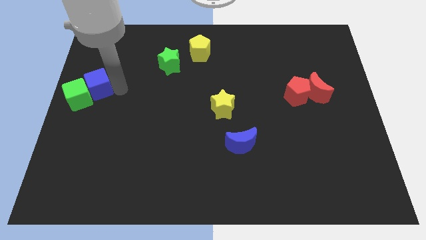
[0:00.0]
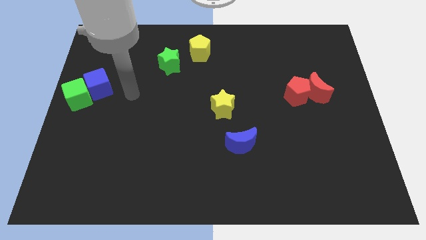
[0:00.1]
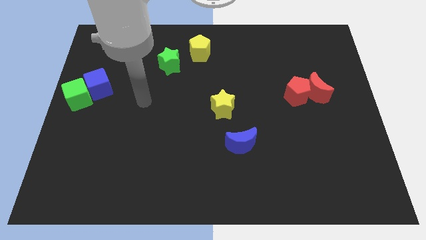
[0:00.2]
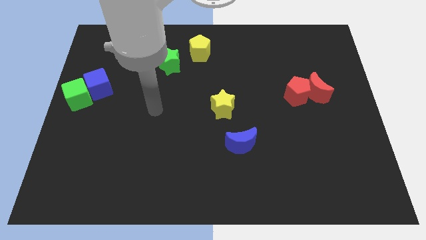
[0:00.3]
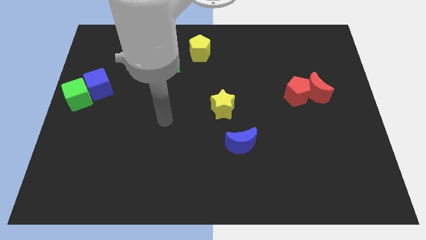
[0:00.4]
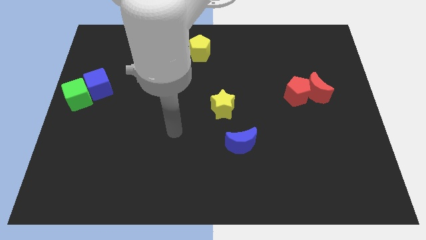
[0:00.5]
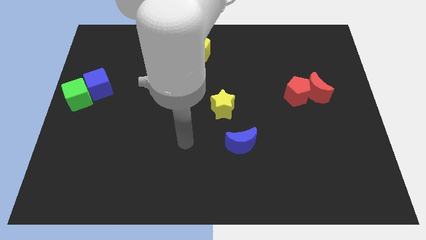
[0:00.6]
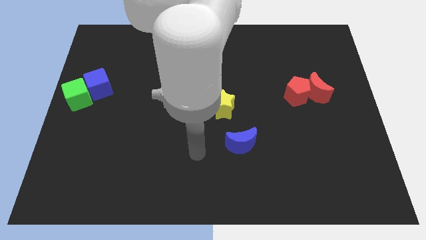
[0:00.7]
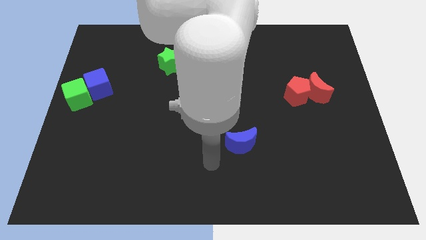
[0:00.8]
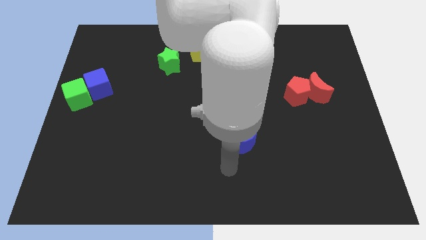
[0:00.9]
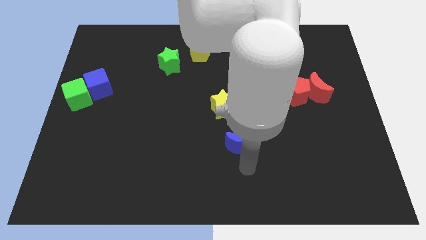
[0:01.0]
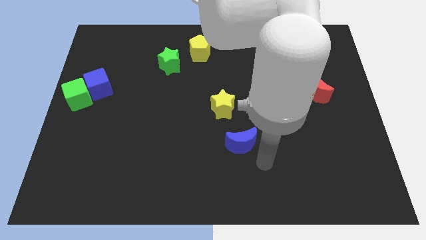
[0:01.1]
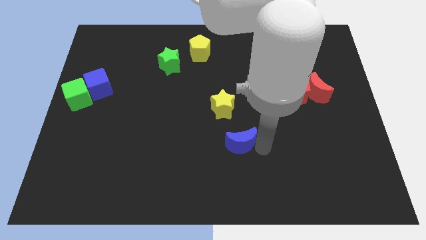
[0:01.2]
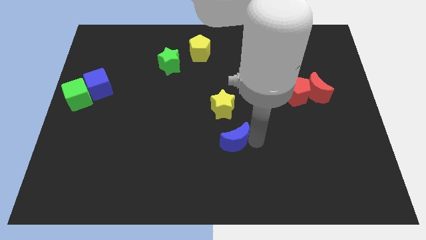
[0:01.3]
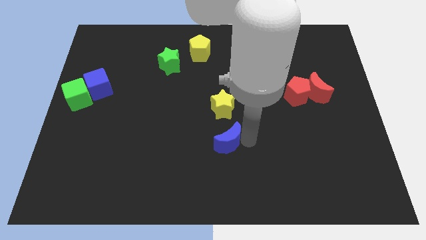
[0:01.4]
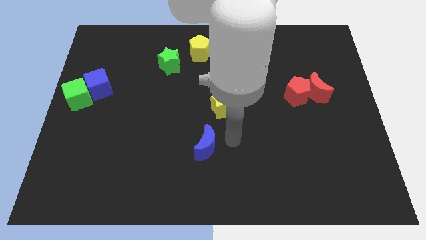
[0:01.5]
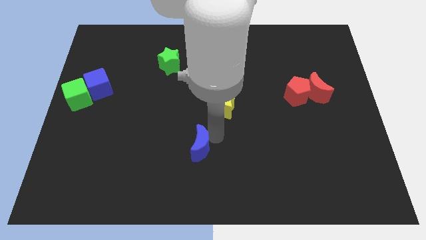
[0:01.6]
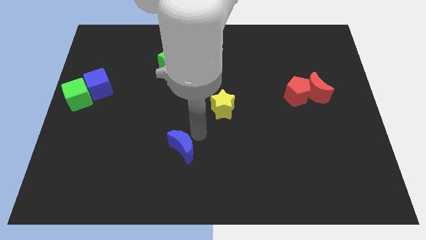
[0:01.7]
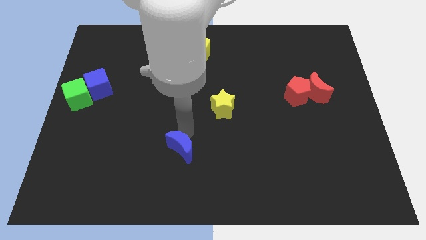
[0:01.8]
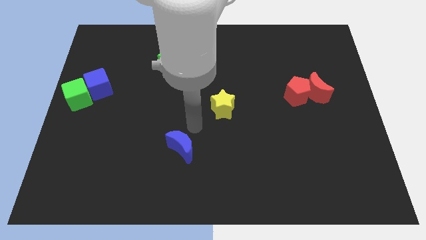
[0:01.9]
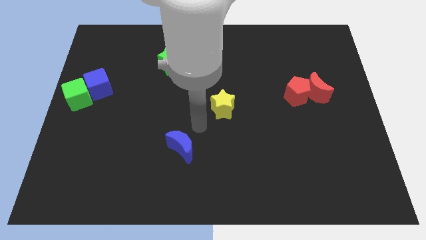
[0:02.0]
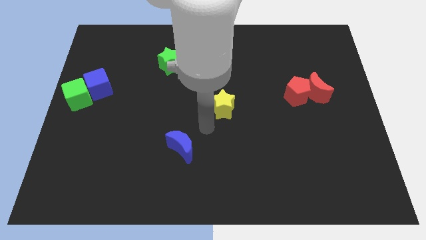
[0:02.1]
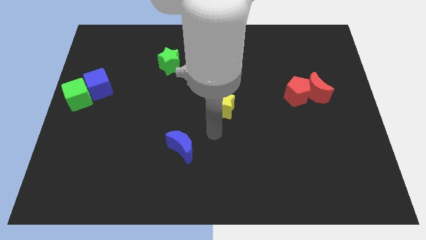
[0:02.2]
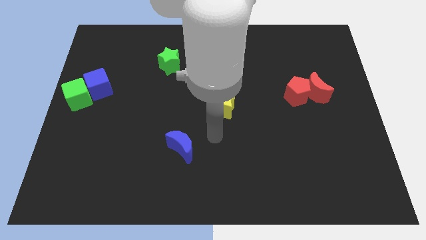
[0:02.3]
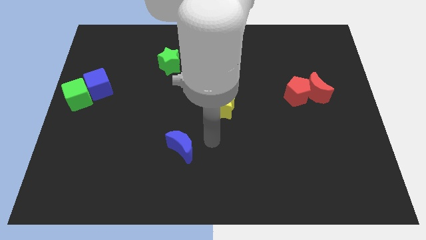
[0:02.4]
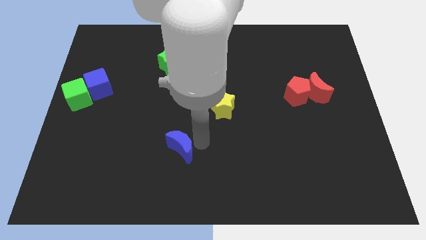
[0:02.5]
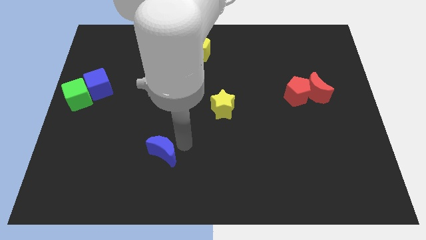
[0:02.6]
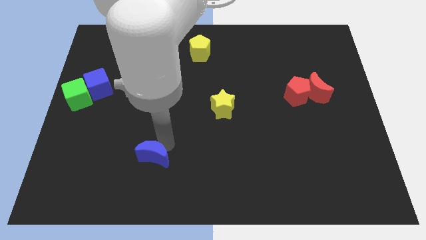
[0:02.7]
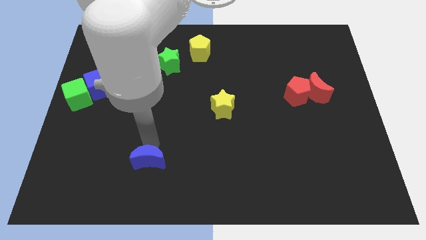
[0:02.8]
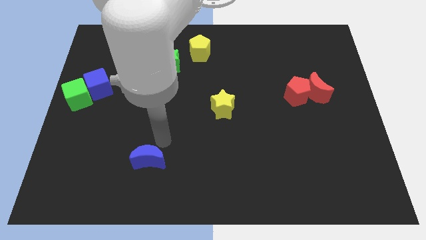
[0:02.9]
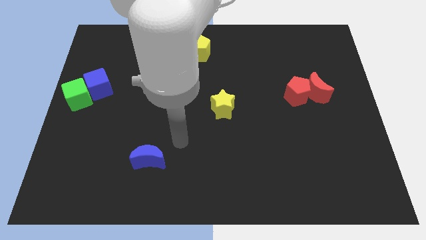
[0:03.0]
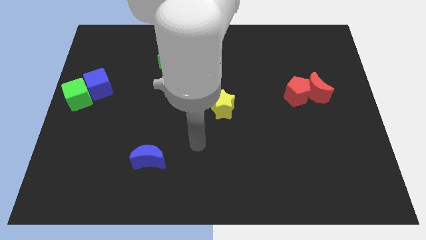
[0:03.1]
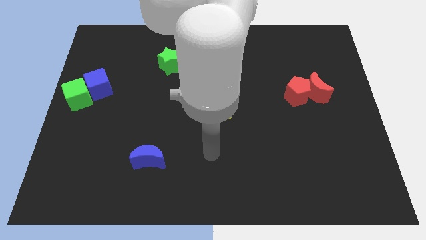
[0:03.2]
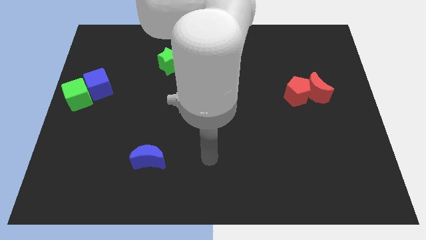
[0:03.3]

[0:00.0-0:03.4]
place your arm parallel to blue moon

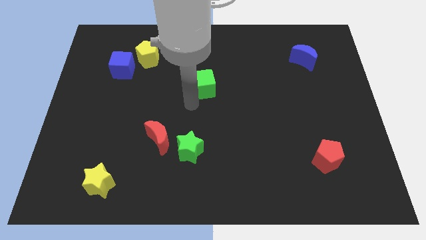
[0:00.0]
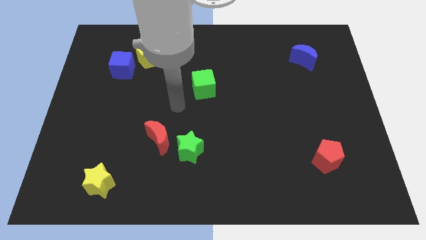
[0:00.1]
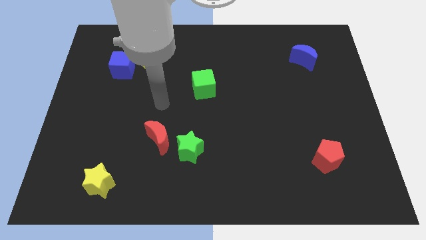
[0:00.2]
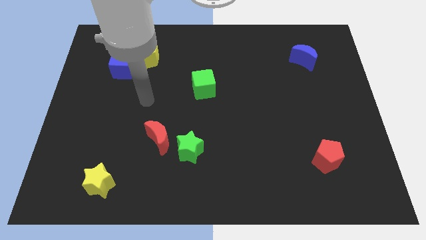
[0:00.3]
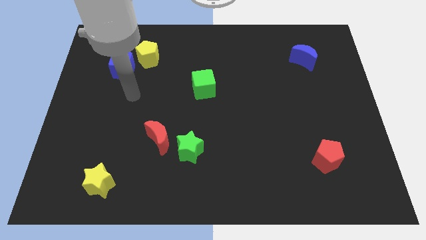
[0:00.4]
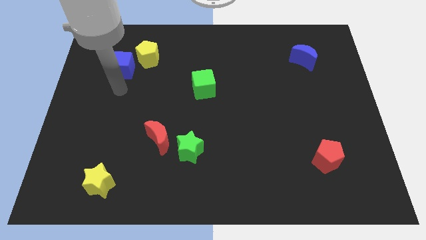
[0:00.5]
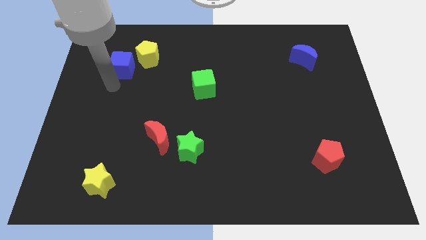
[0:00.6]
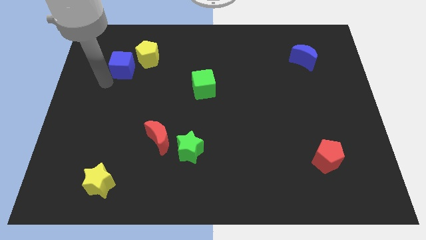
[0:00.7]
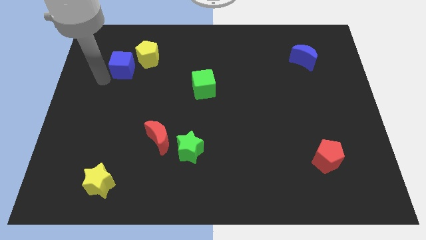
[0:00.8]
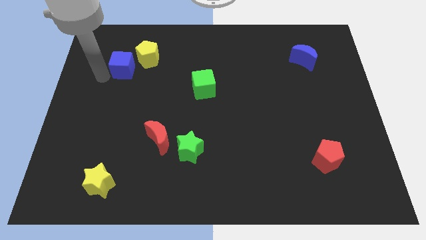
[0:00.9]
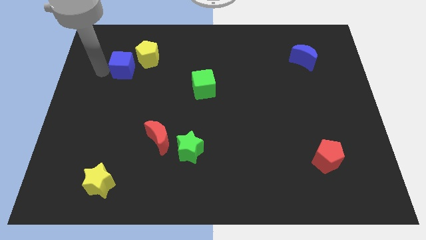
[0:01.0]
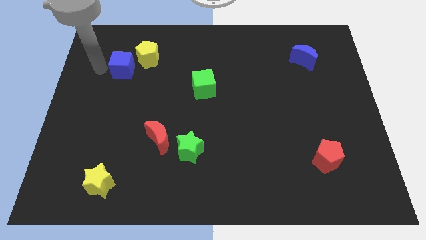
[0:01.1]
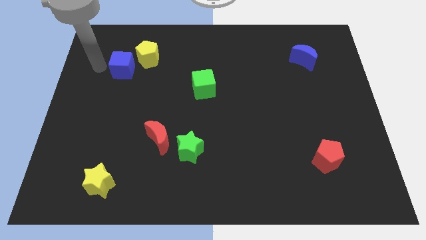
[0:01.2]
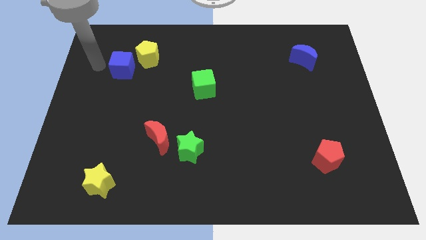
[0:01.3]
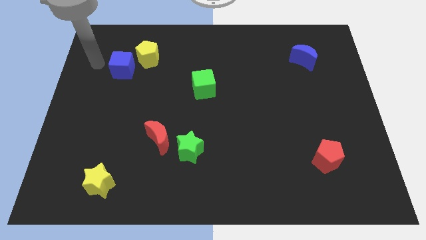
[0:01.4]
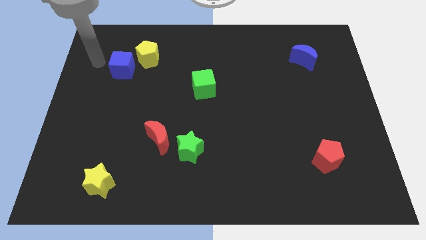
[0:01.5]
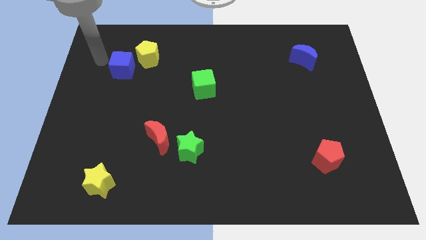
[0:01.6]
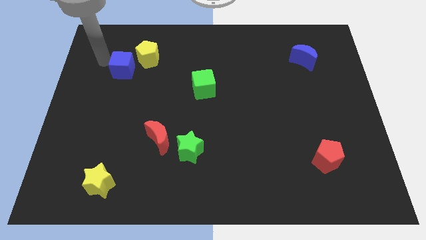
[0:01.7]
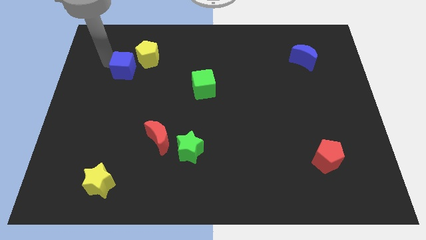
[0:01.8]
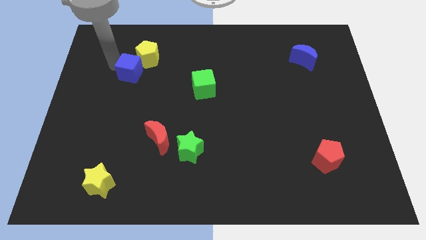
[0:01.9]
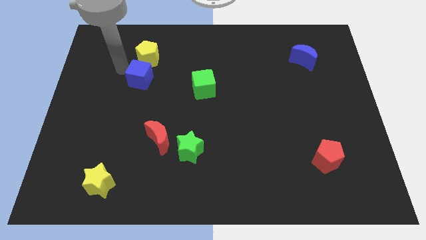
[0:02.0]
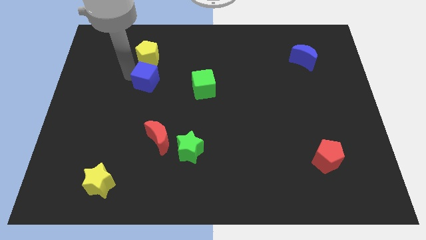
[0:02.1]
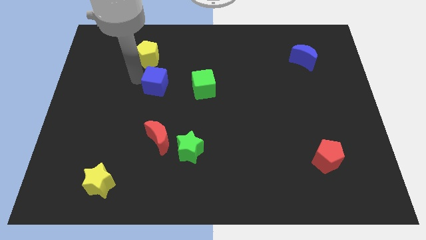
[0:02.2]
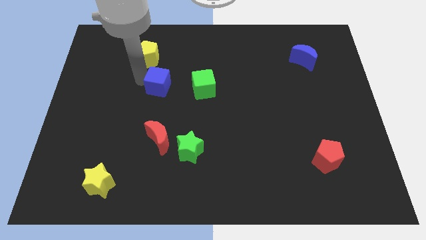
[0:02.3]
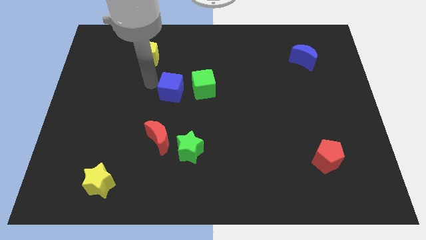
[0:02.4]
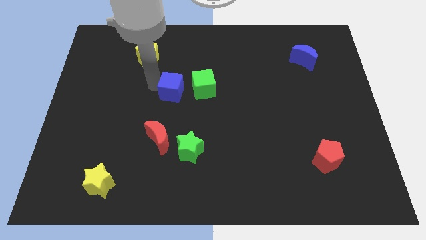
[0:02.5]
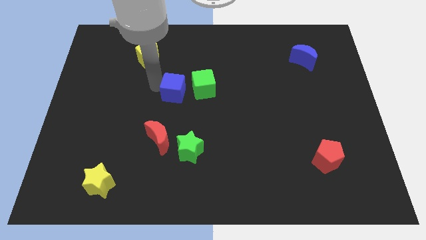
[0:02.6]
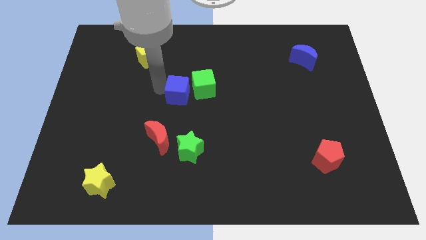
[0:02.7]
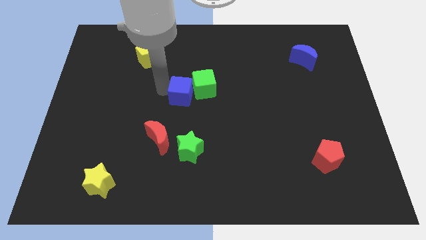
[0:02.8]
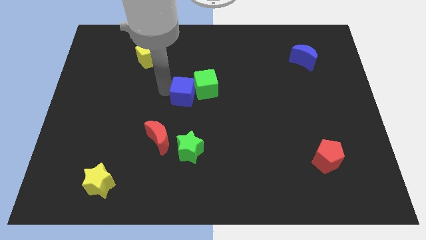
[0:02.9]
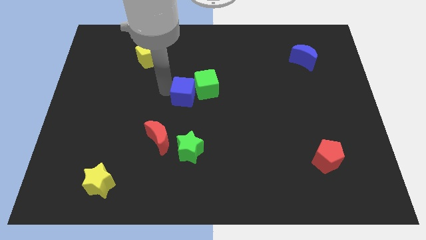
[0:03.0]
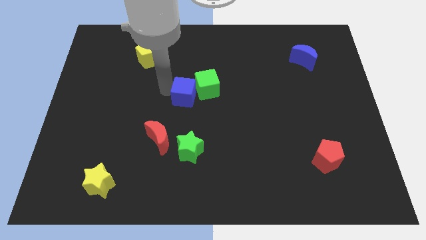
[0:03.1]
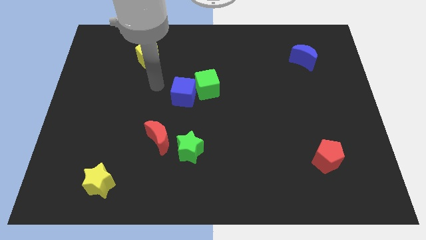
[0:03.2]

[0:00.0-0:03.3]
move the blue cube to the bottom left side of the green cube

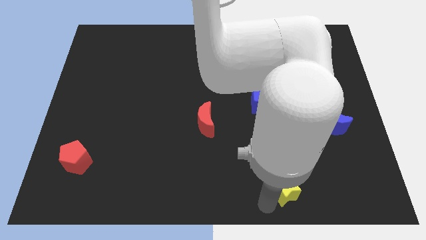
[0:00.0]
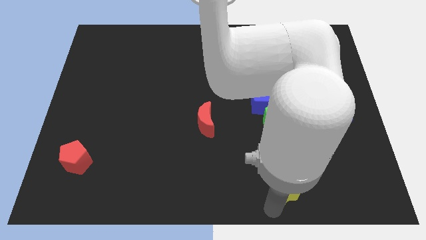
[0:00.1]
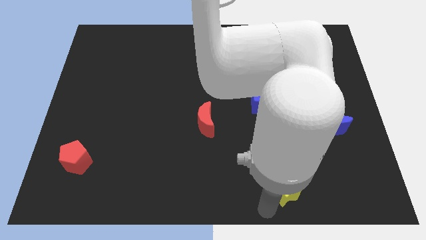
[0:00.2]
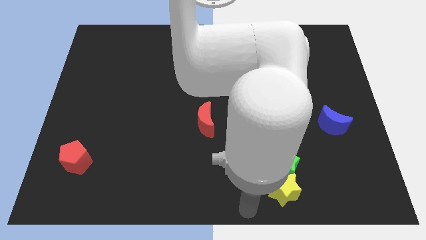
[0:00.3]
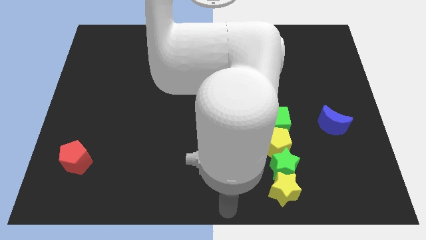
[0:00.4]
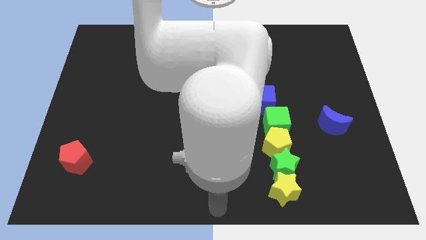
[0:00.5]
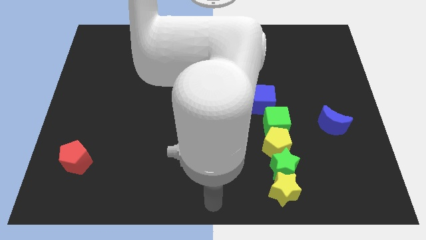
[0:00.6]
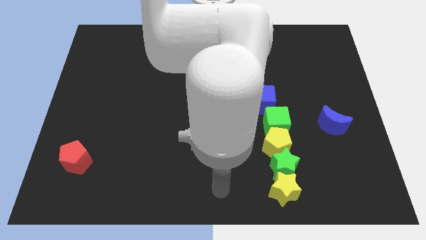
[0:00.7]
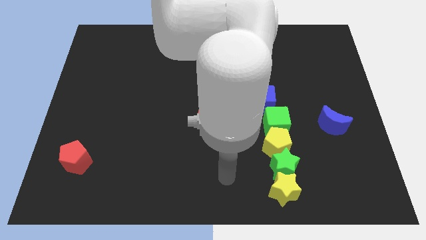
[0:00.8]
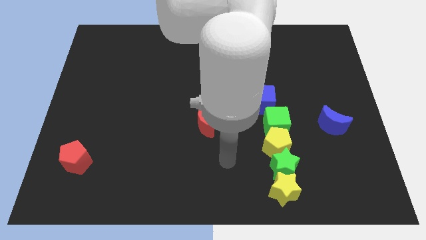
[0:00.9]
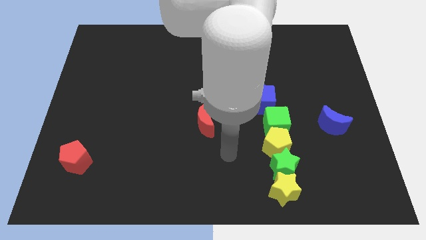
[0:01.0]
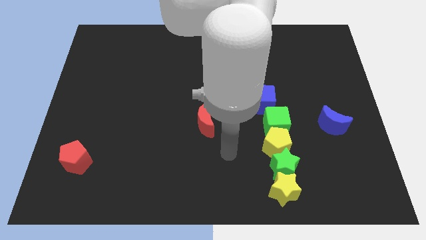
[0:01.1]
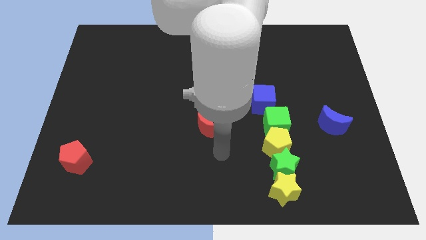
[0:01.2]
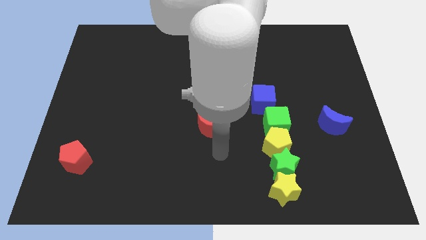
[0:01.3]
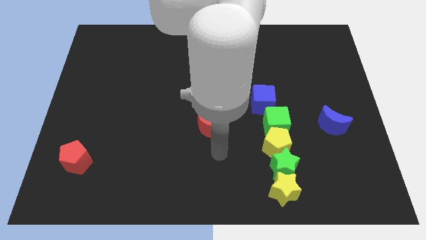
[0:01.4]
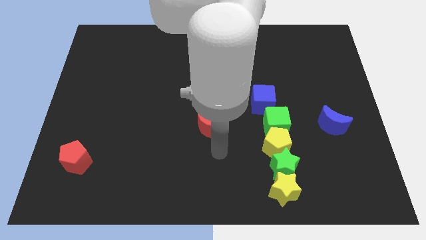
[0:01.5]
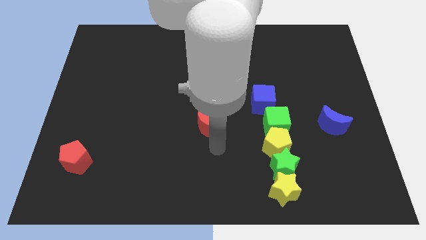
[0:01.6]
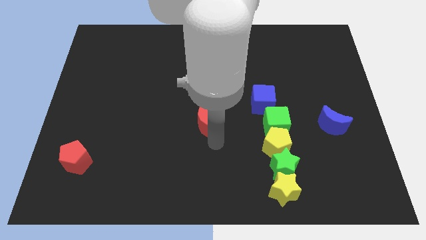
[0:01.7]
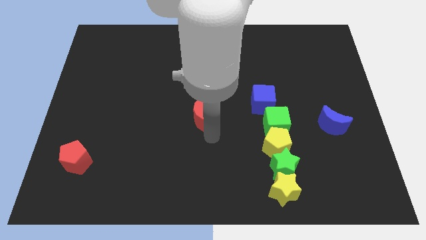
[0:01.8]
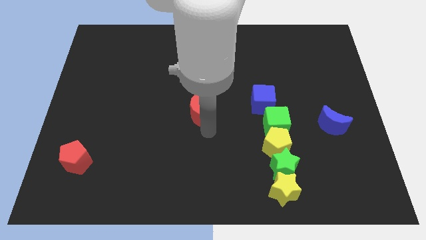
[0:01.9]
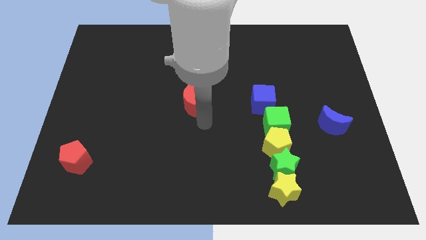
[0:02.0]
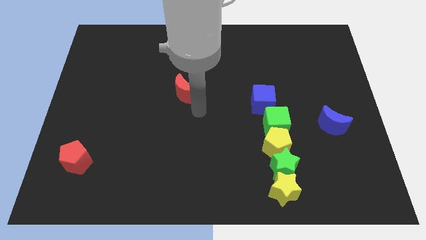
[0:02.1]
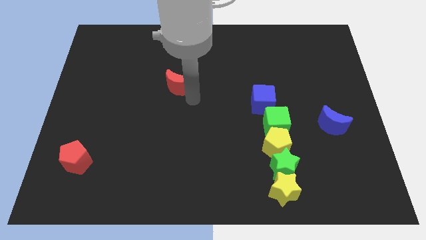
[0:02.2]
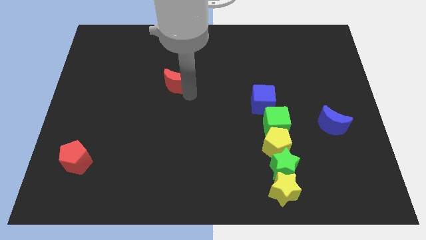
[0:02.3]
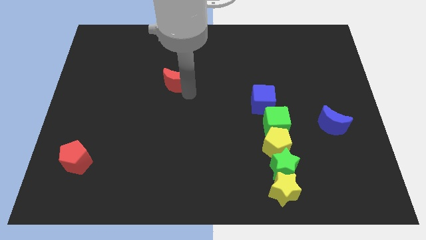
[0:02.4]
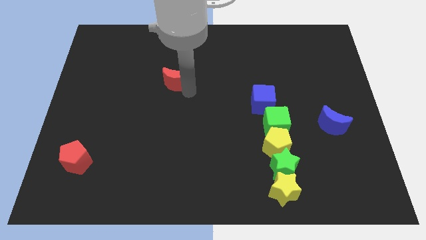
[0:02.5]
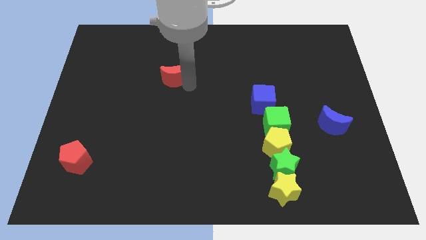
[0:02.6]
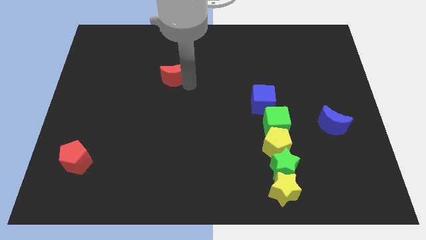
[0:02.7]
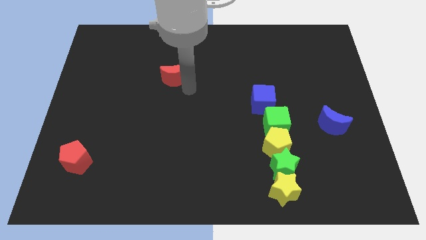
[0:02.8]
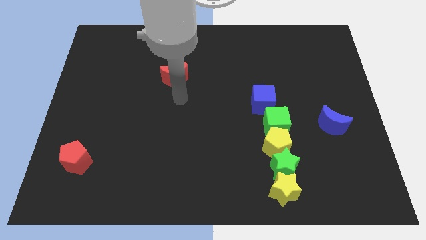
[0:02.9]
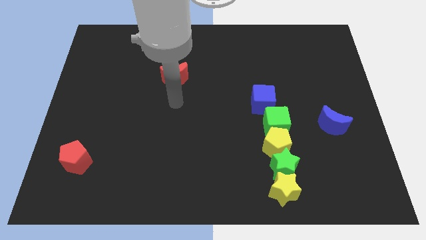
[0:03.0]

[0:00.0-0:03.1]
slide red moon towards top
